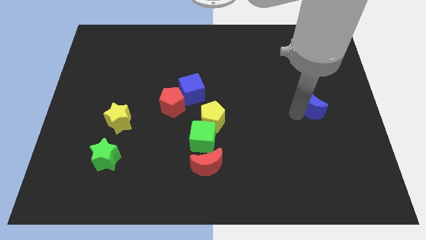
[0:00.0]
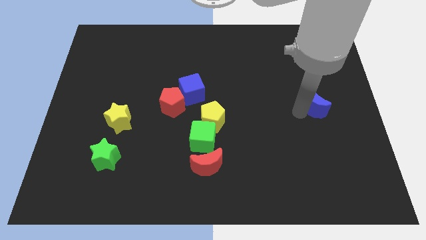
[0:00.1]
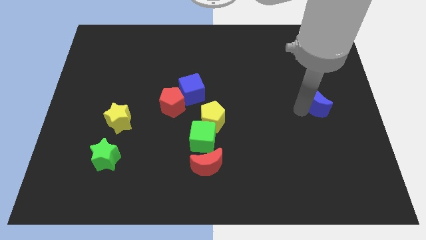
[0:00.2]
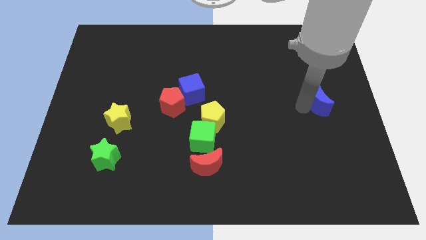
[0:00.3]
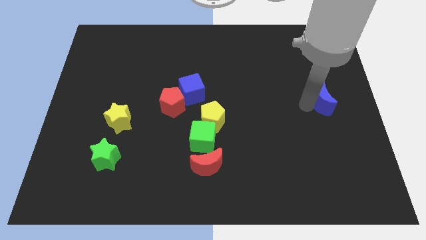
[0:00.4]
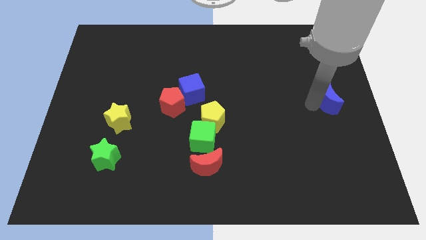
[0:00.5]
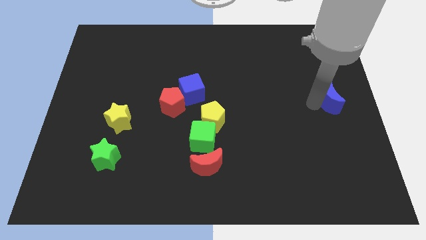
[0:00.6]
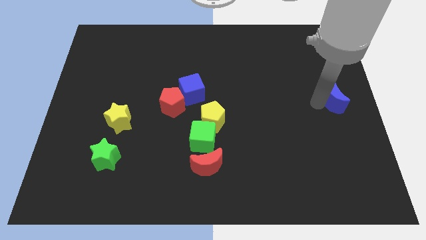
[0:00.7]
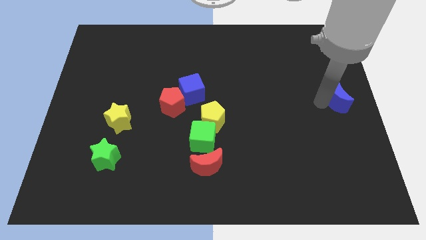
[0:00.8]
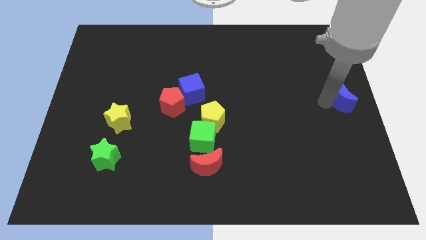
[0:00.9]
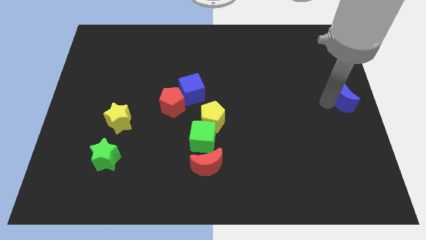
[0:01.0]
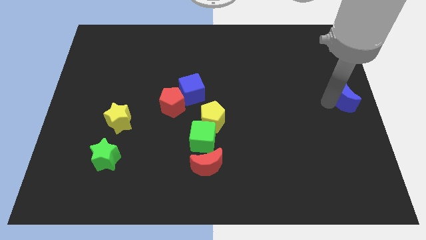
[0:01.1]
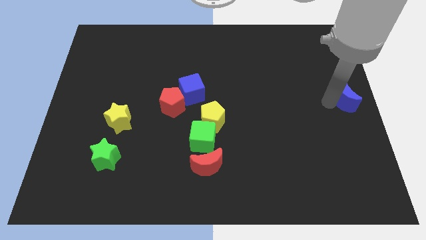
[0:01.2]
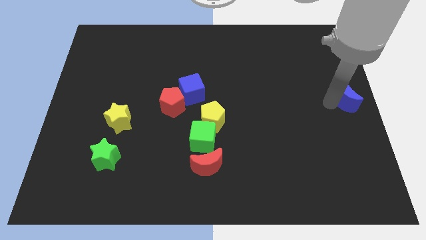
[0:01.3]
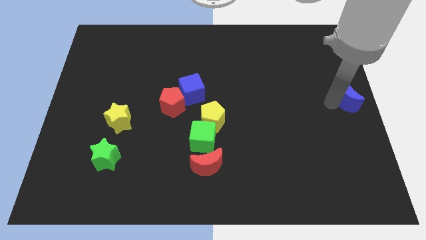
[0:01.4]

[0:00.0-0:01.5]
push the blue crescent to the center right side of the board

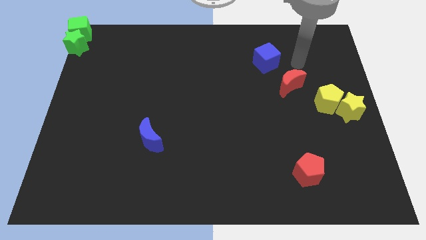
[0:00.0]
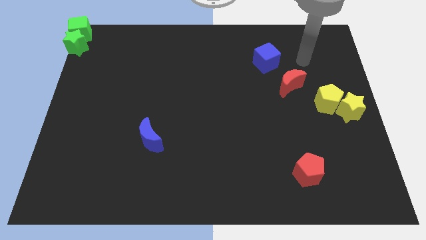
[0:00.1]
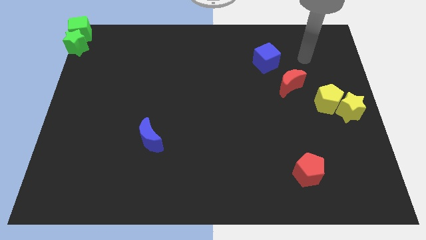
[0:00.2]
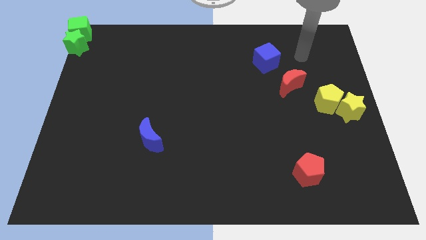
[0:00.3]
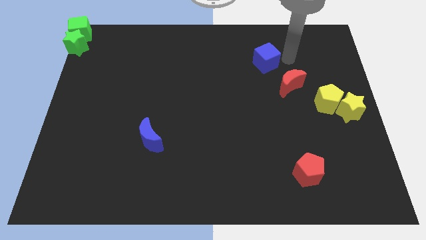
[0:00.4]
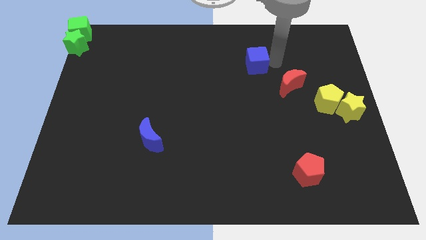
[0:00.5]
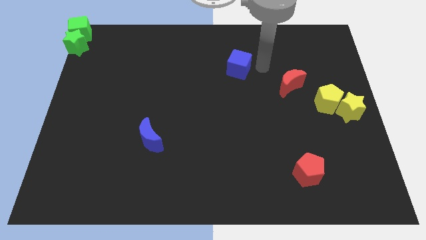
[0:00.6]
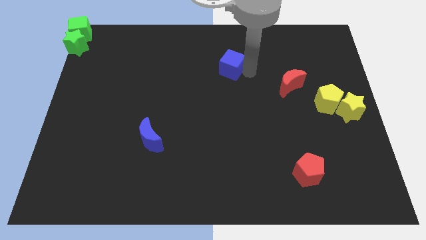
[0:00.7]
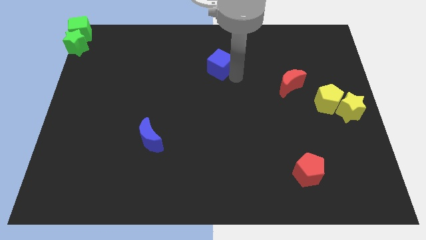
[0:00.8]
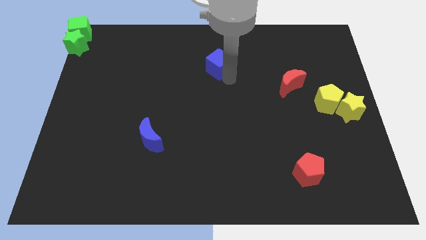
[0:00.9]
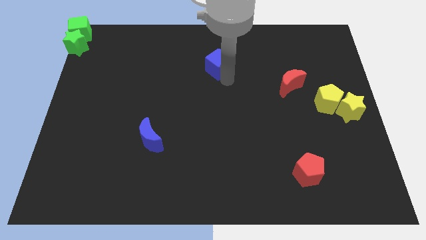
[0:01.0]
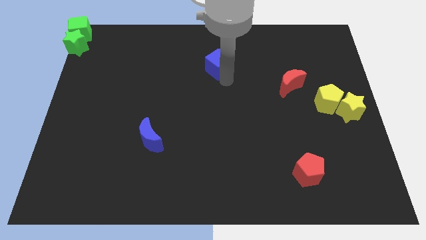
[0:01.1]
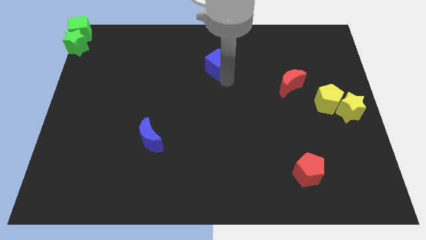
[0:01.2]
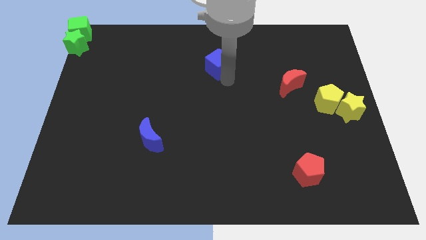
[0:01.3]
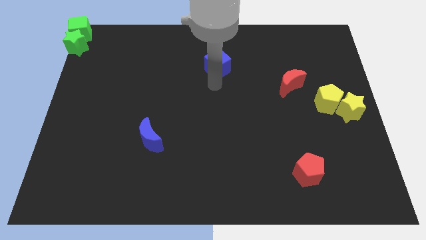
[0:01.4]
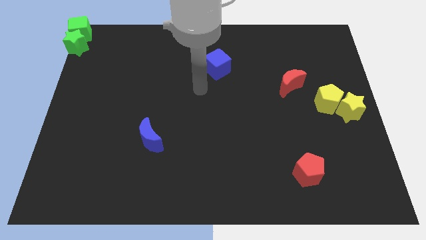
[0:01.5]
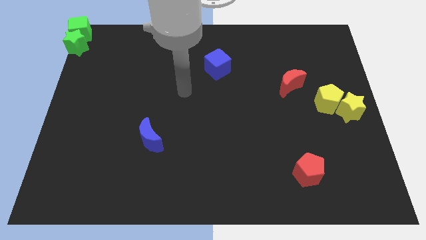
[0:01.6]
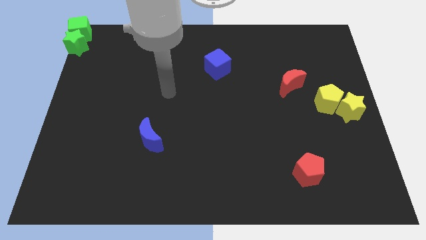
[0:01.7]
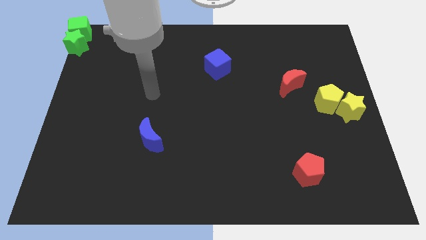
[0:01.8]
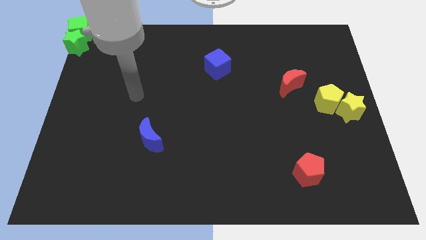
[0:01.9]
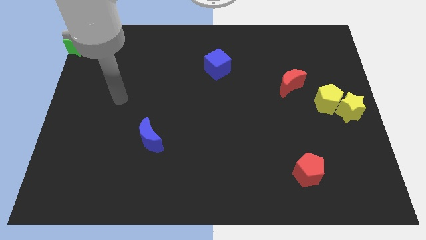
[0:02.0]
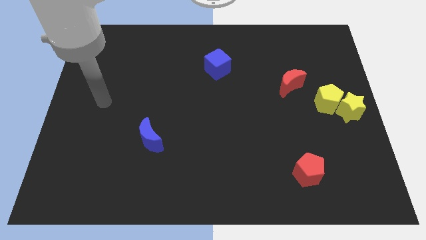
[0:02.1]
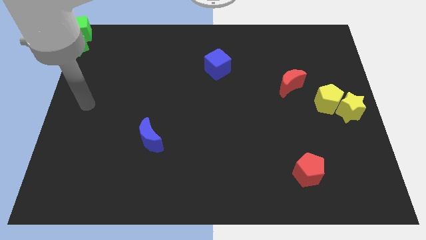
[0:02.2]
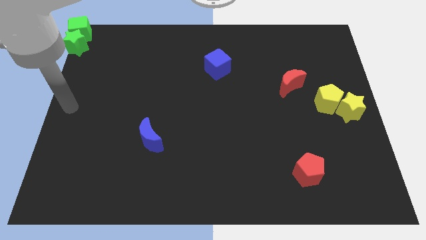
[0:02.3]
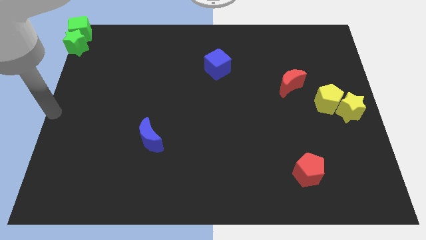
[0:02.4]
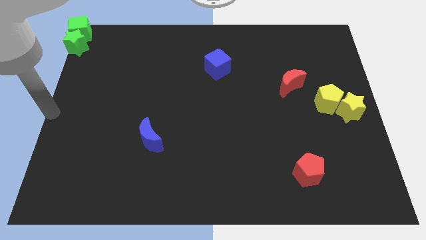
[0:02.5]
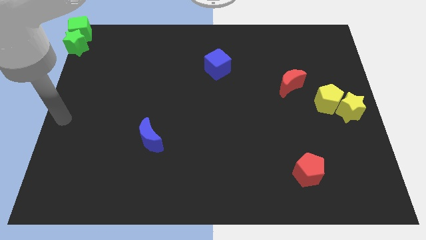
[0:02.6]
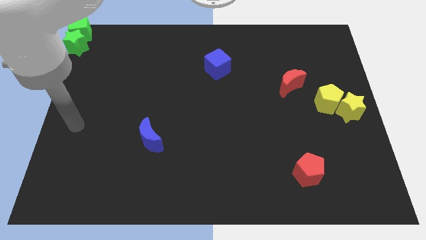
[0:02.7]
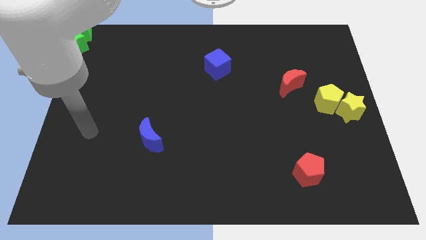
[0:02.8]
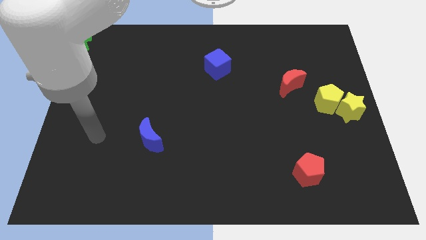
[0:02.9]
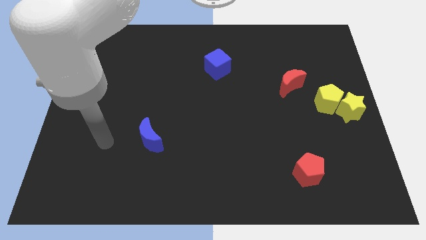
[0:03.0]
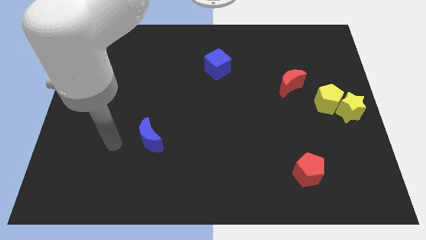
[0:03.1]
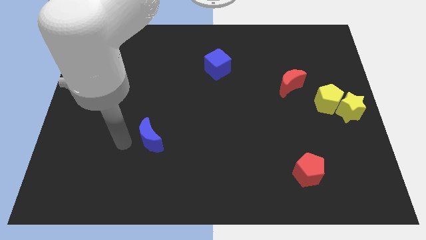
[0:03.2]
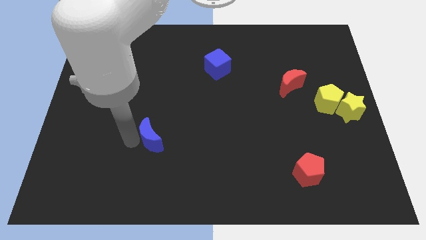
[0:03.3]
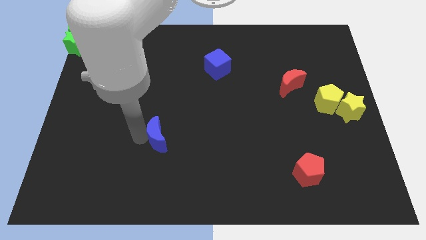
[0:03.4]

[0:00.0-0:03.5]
place the blue cube diagonal to the blue moon

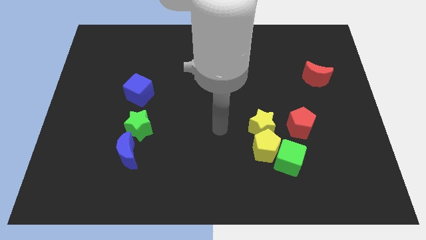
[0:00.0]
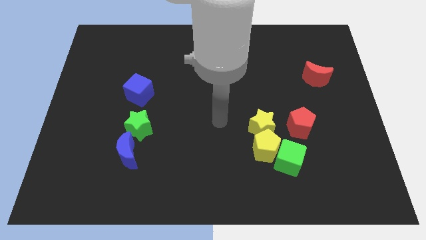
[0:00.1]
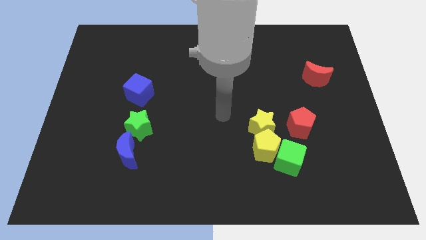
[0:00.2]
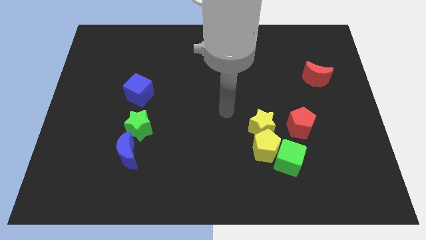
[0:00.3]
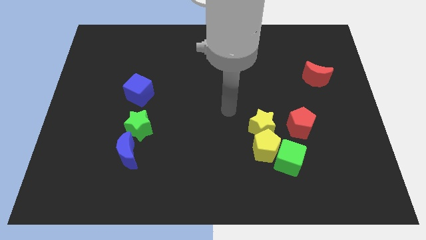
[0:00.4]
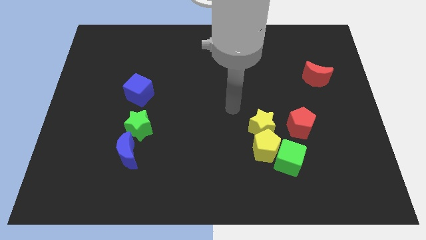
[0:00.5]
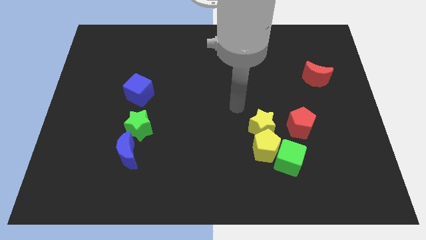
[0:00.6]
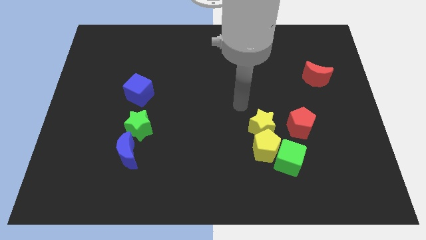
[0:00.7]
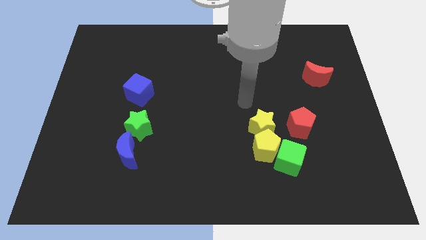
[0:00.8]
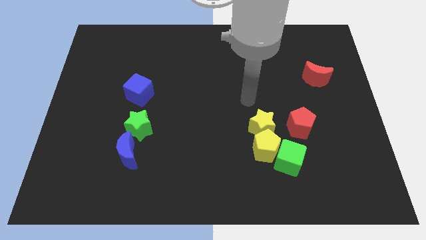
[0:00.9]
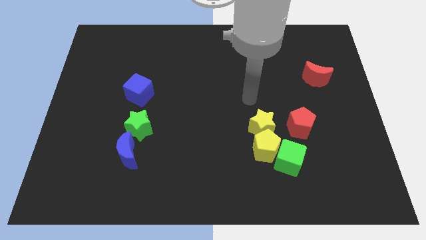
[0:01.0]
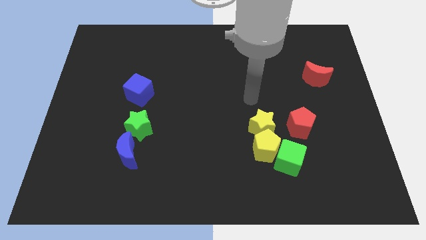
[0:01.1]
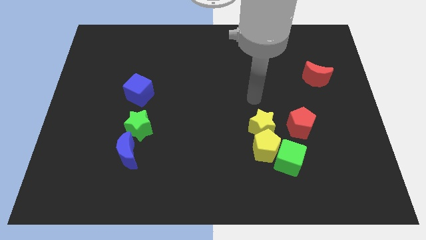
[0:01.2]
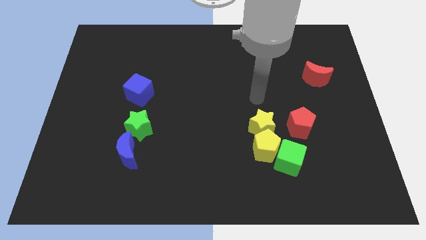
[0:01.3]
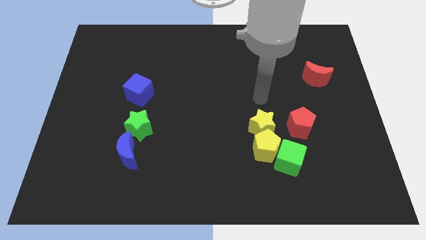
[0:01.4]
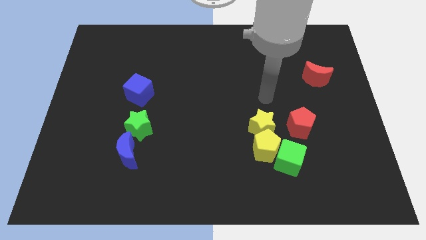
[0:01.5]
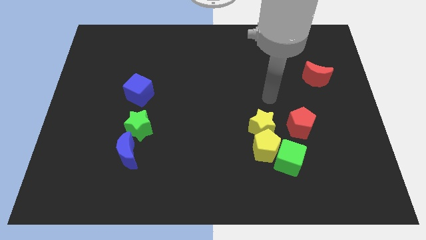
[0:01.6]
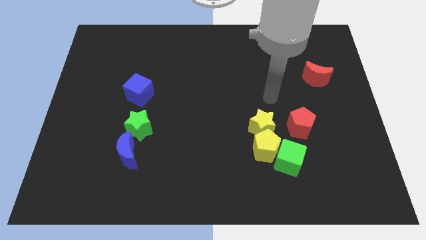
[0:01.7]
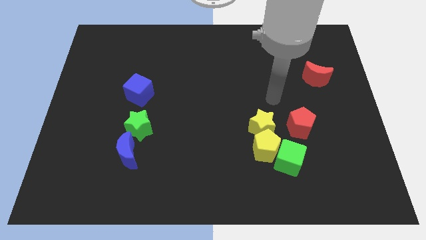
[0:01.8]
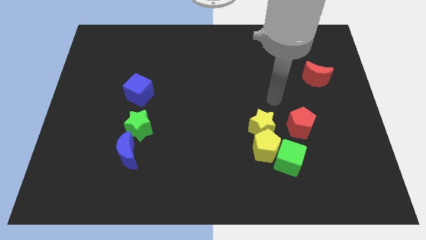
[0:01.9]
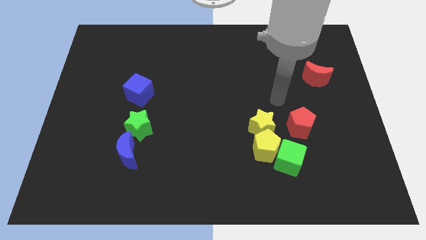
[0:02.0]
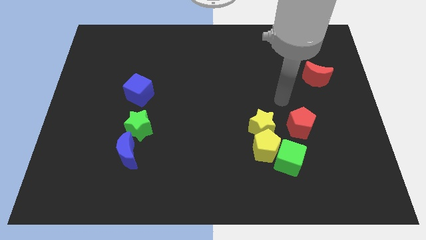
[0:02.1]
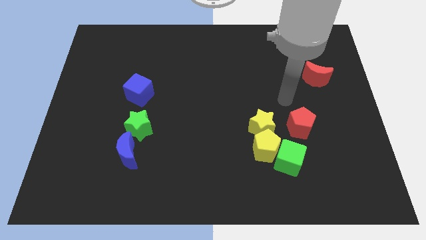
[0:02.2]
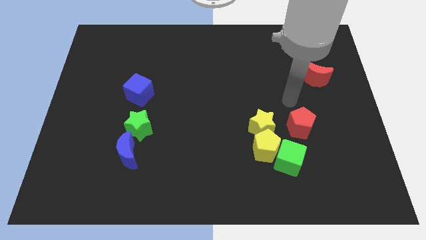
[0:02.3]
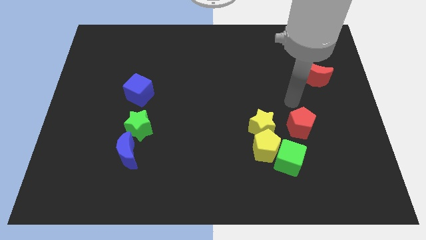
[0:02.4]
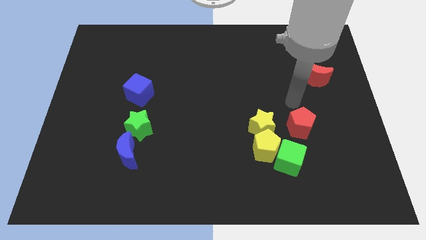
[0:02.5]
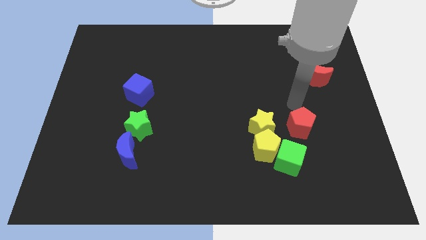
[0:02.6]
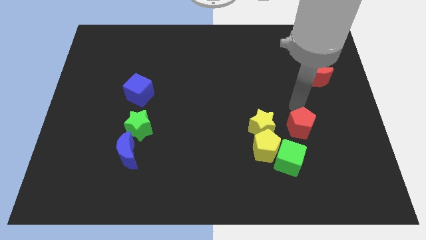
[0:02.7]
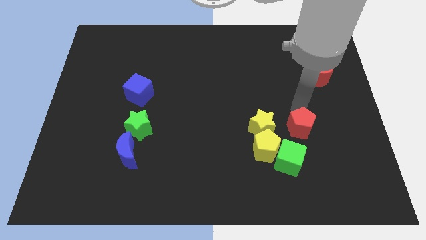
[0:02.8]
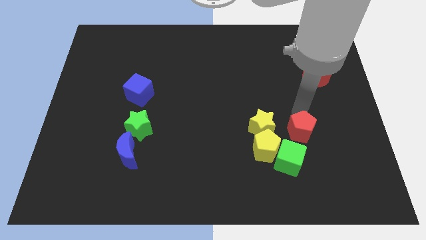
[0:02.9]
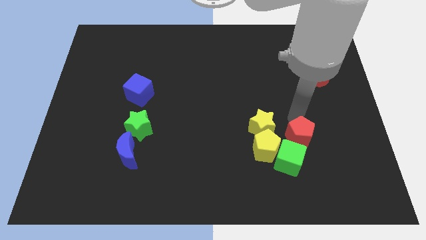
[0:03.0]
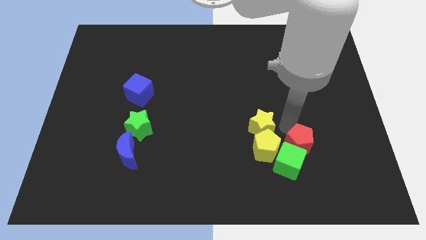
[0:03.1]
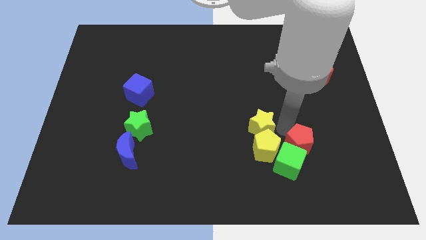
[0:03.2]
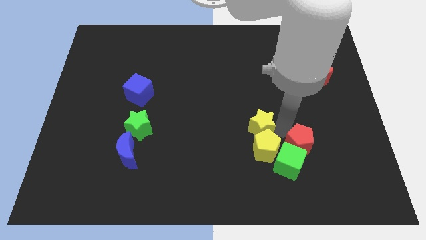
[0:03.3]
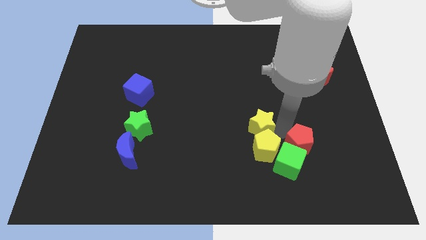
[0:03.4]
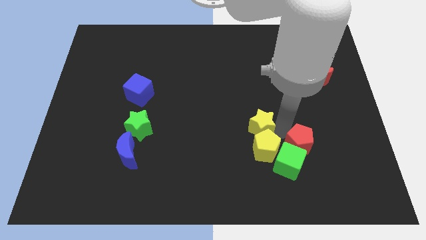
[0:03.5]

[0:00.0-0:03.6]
push the red pentagon into the green cube

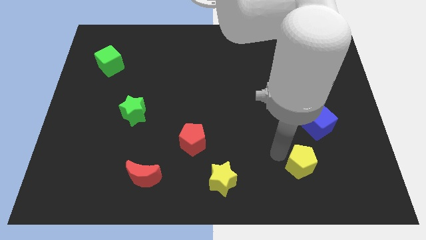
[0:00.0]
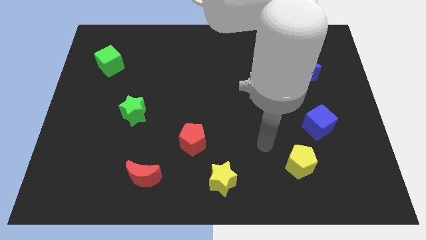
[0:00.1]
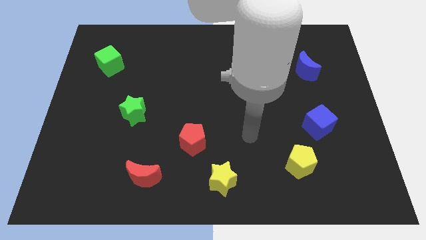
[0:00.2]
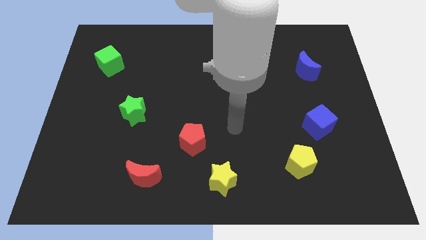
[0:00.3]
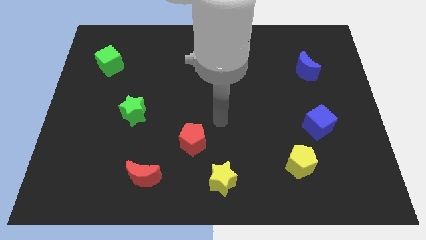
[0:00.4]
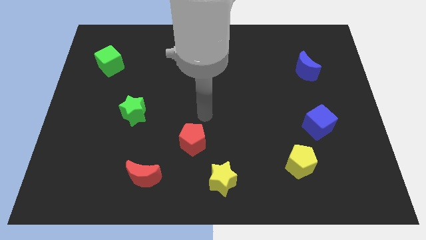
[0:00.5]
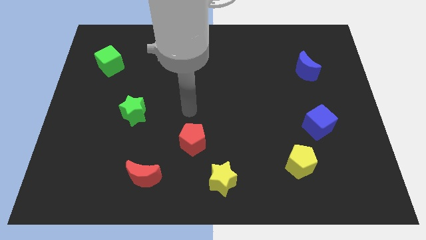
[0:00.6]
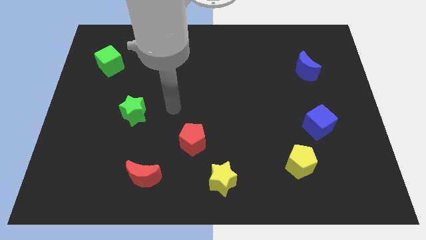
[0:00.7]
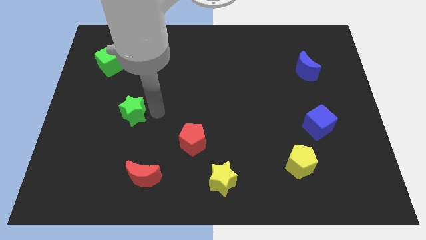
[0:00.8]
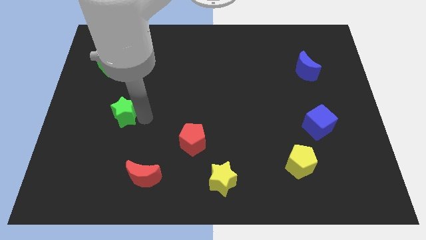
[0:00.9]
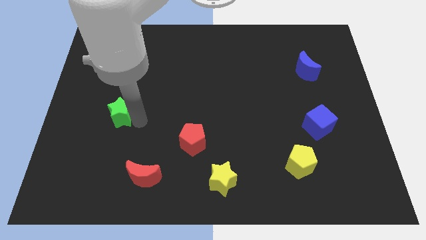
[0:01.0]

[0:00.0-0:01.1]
tap on the right side of the green star
